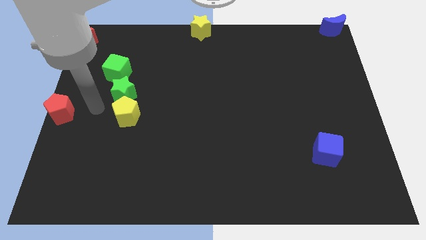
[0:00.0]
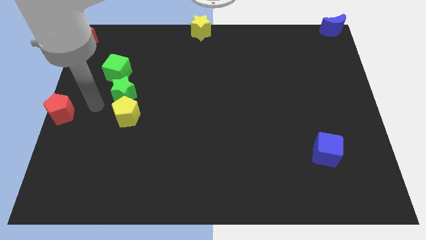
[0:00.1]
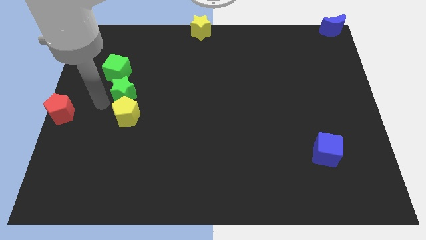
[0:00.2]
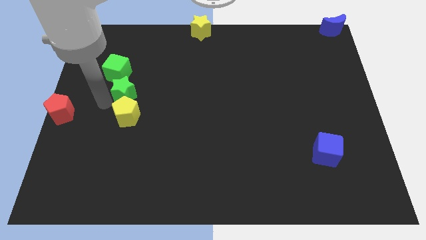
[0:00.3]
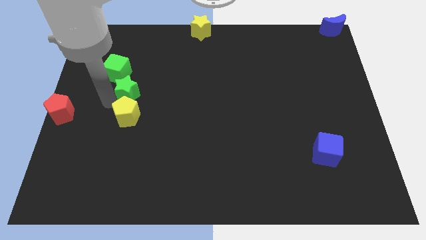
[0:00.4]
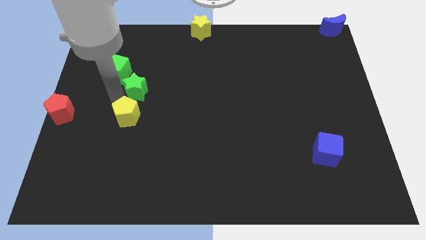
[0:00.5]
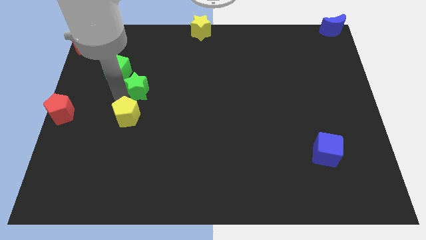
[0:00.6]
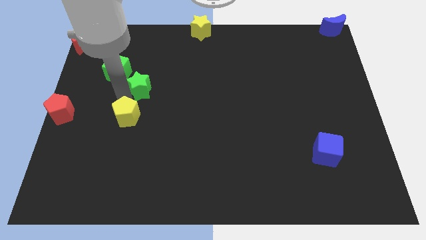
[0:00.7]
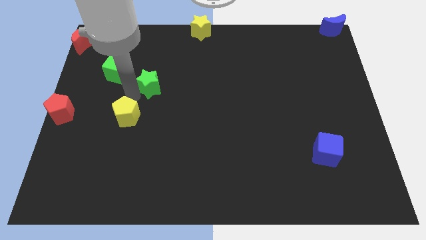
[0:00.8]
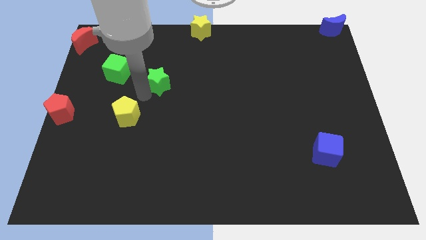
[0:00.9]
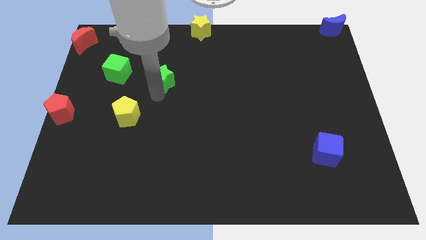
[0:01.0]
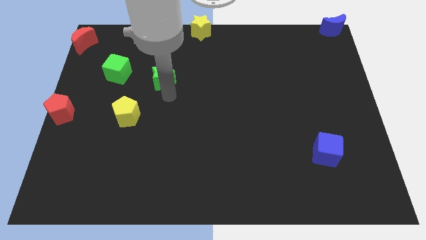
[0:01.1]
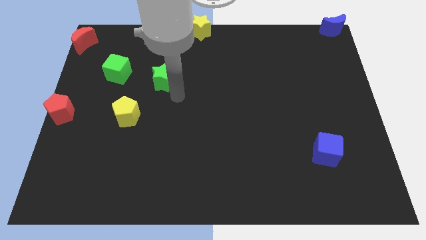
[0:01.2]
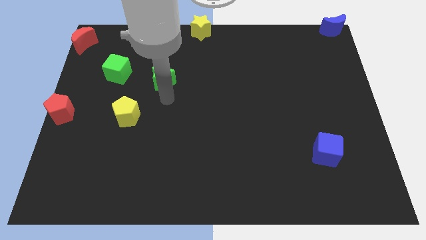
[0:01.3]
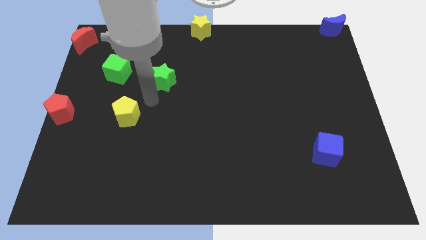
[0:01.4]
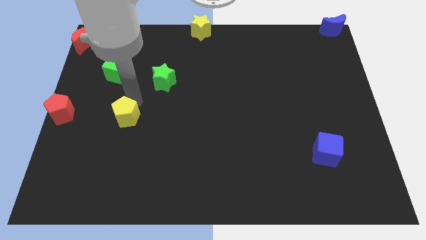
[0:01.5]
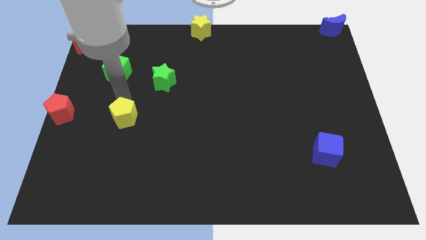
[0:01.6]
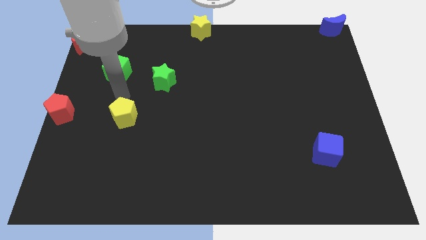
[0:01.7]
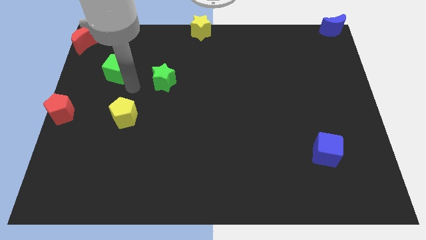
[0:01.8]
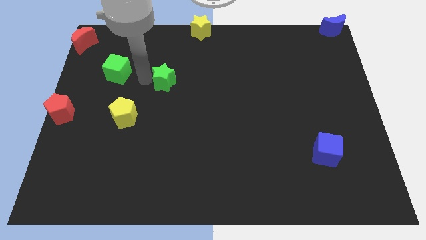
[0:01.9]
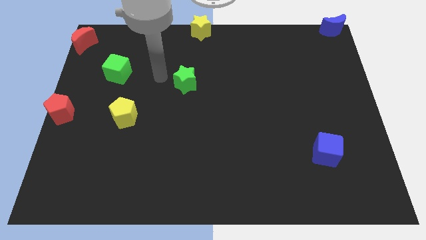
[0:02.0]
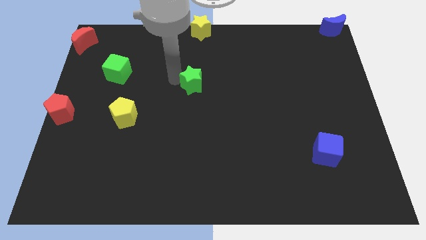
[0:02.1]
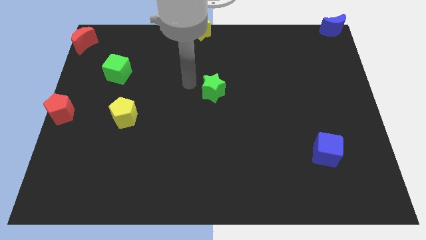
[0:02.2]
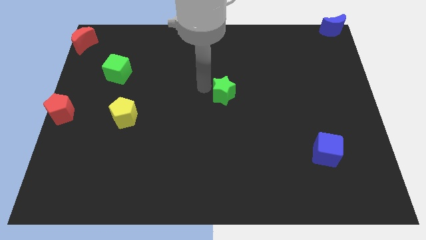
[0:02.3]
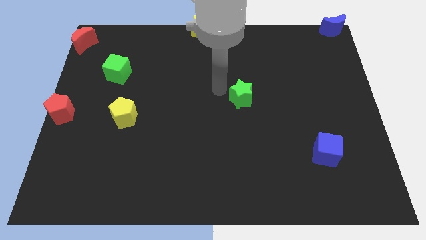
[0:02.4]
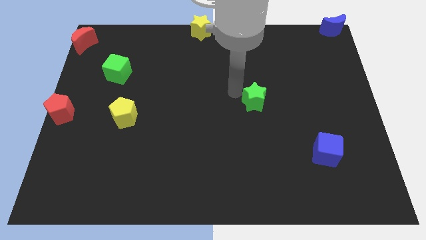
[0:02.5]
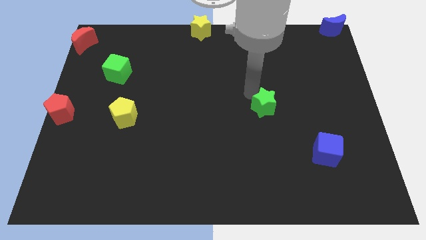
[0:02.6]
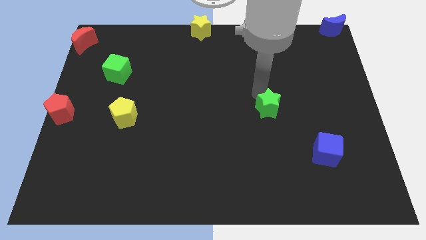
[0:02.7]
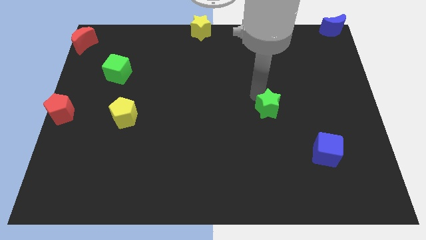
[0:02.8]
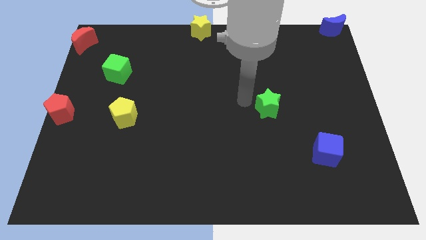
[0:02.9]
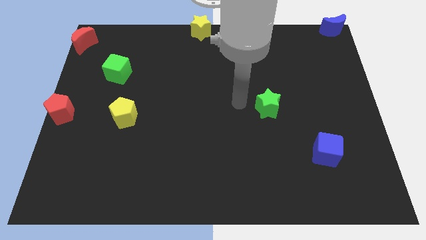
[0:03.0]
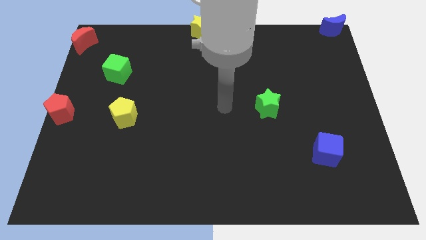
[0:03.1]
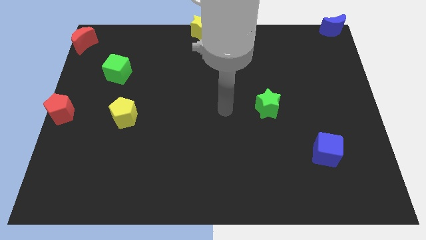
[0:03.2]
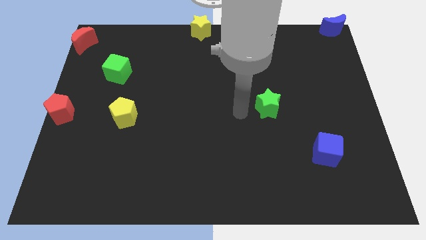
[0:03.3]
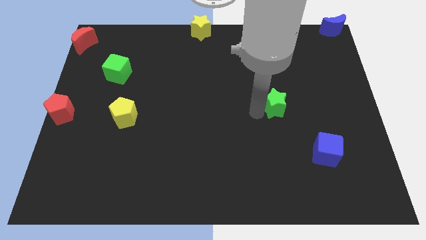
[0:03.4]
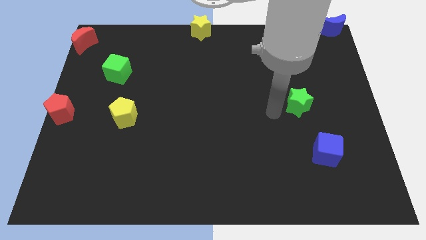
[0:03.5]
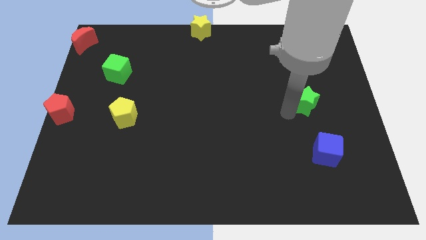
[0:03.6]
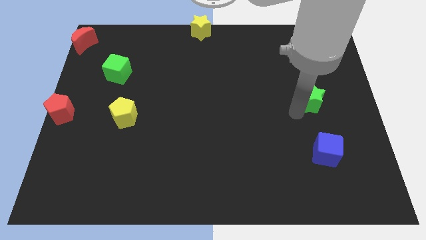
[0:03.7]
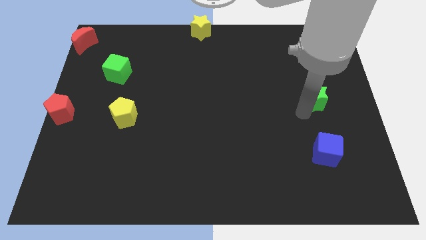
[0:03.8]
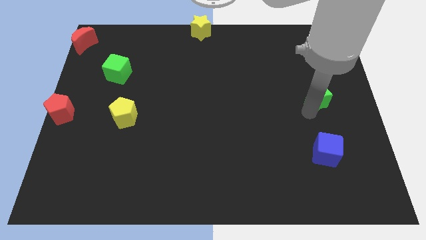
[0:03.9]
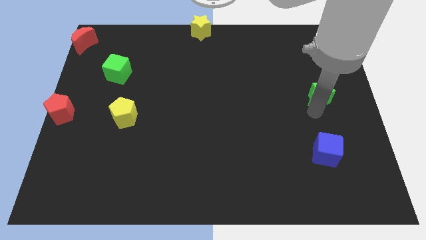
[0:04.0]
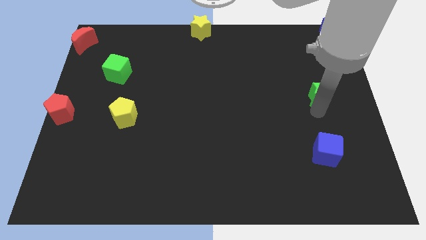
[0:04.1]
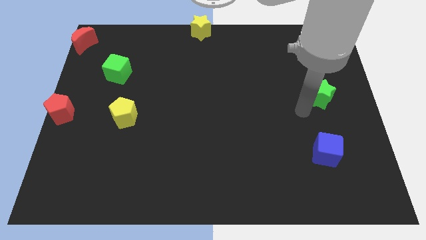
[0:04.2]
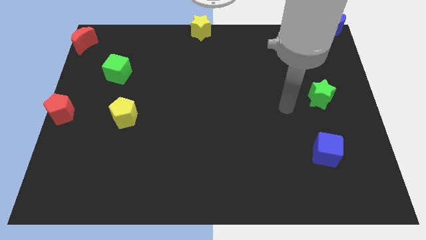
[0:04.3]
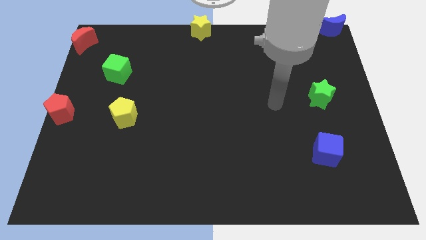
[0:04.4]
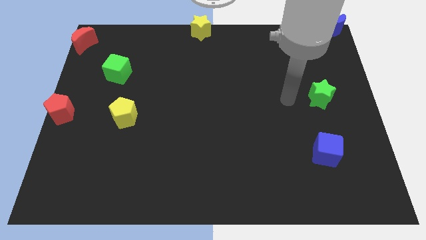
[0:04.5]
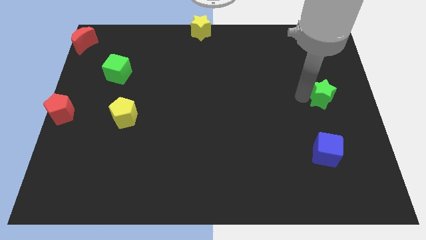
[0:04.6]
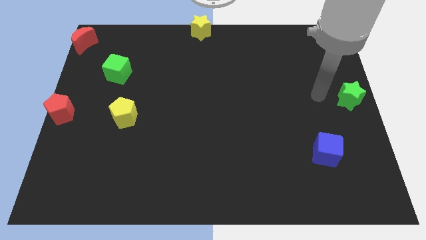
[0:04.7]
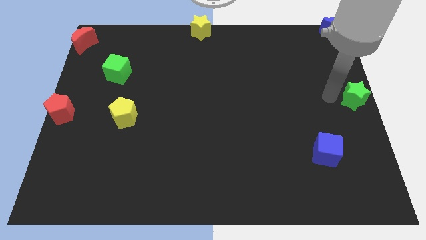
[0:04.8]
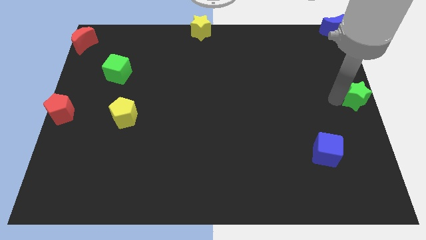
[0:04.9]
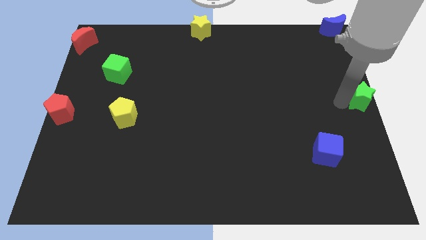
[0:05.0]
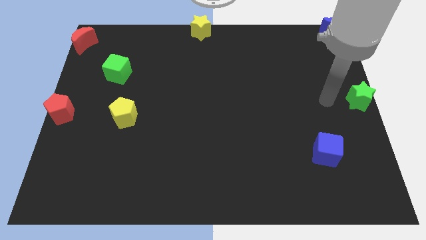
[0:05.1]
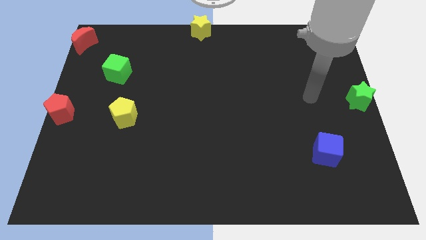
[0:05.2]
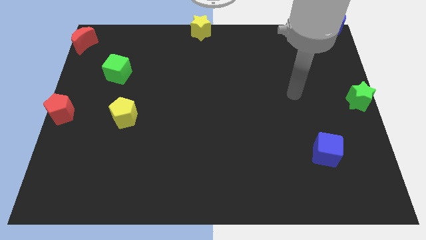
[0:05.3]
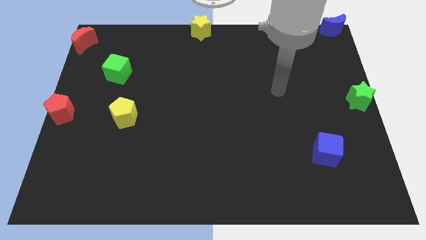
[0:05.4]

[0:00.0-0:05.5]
push the green star to the center right

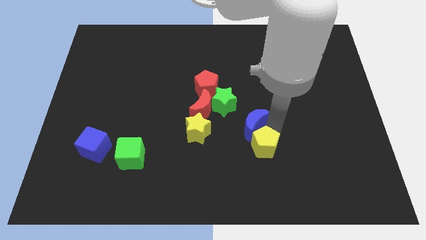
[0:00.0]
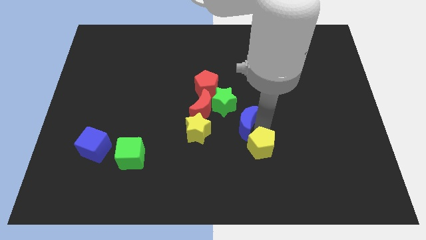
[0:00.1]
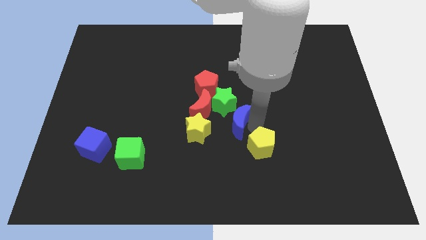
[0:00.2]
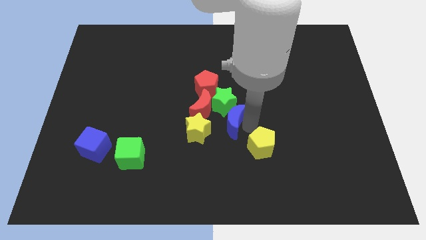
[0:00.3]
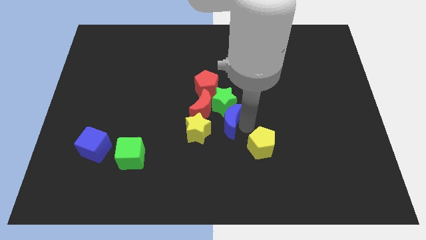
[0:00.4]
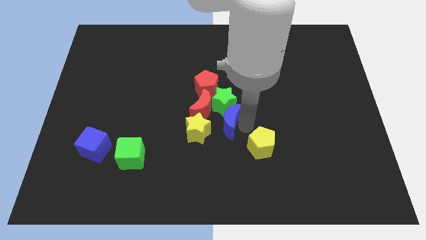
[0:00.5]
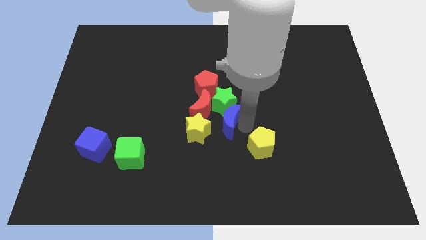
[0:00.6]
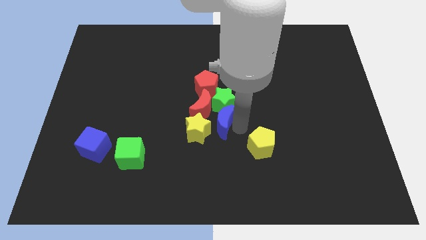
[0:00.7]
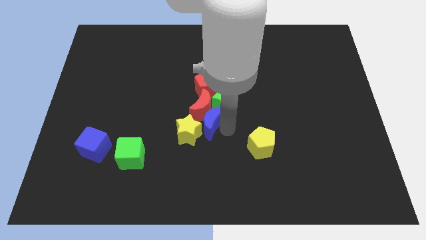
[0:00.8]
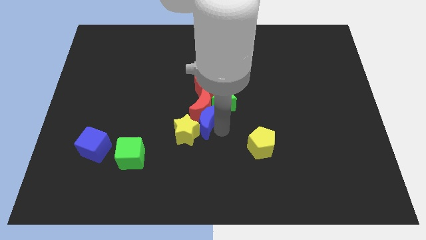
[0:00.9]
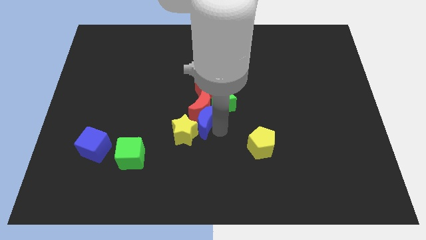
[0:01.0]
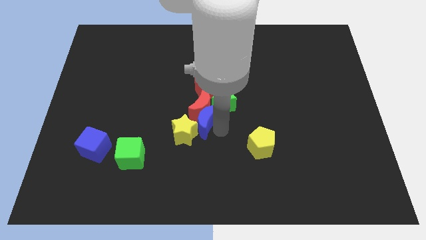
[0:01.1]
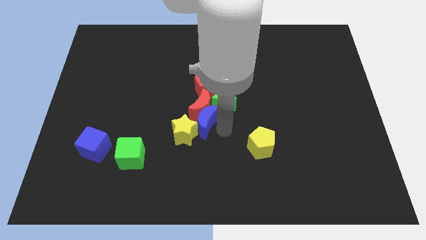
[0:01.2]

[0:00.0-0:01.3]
move the blue crescent into the red crescent

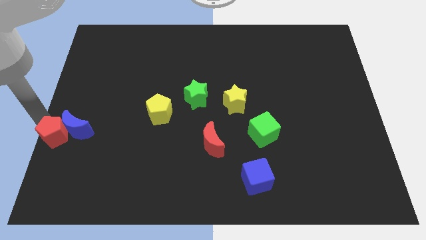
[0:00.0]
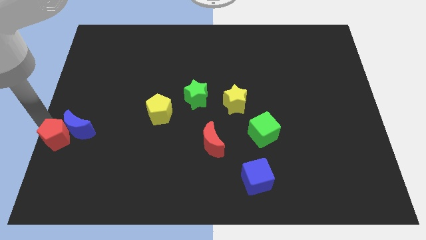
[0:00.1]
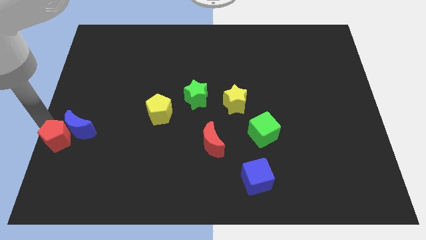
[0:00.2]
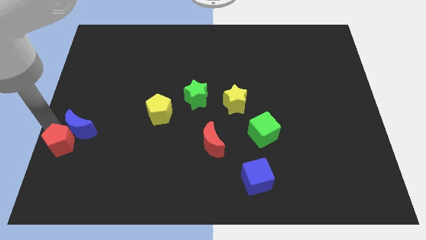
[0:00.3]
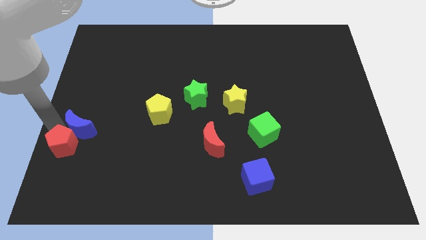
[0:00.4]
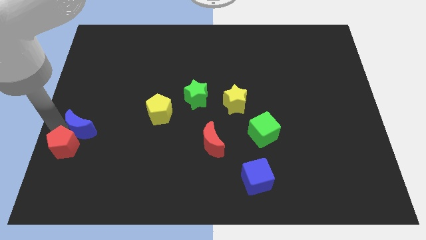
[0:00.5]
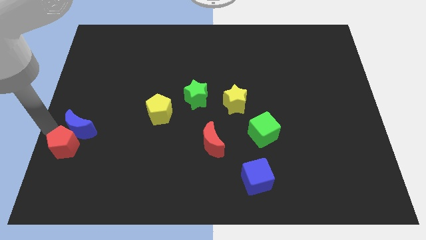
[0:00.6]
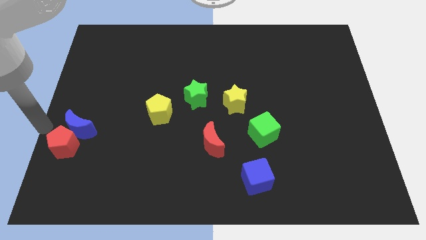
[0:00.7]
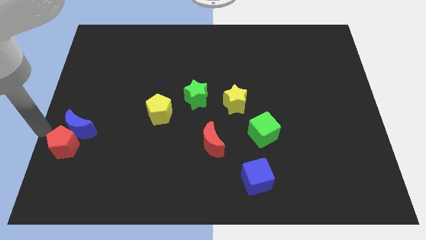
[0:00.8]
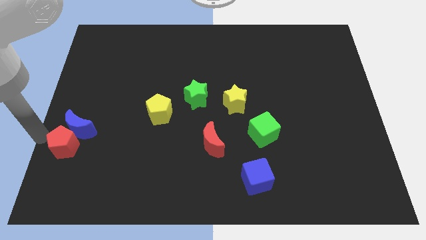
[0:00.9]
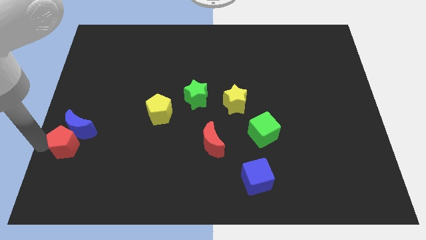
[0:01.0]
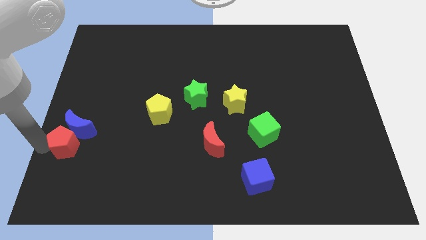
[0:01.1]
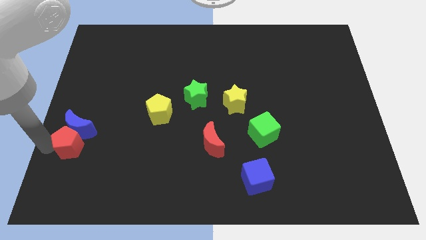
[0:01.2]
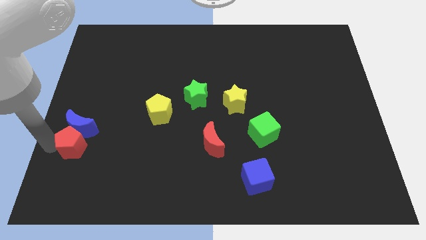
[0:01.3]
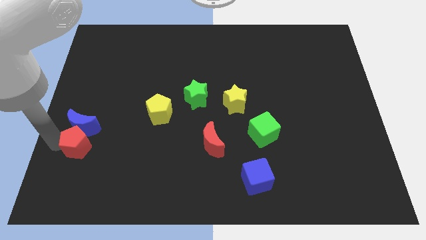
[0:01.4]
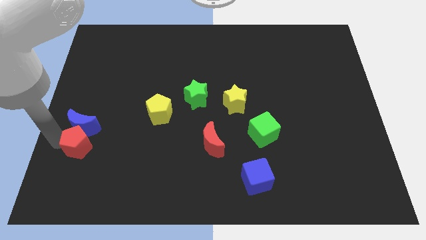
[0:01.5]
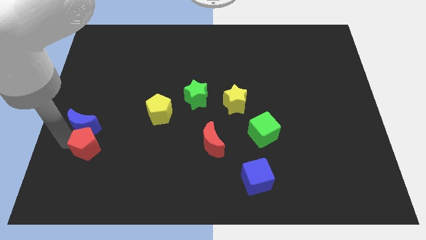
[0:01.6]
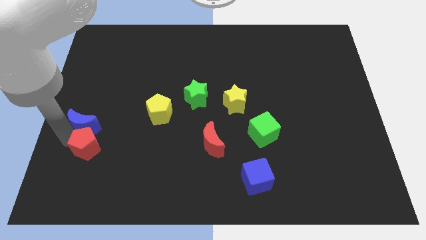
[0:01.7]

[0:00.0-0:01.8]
move the red pentagon below the blue moon

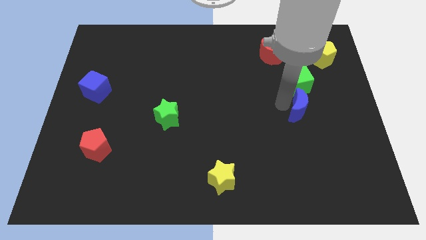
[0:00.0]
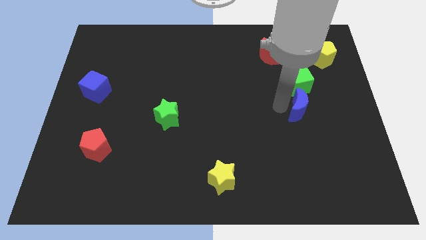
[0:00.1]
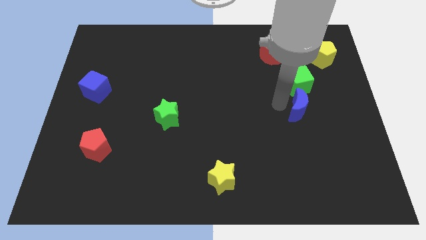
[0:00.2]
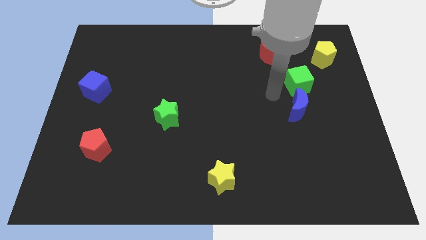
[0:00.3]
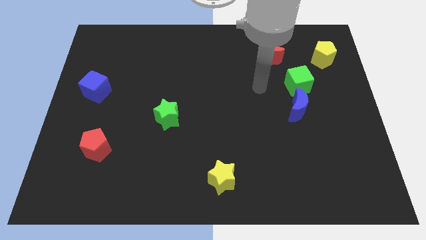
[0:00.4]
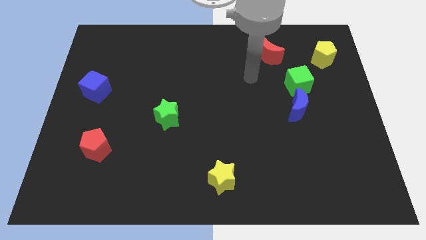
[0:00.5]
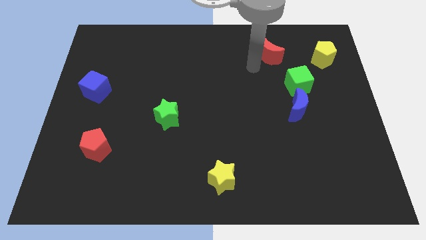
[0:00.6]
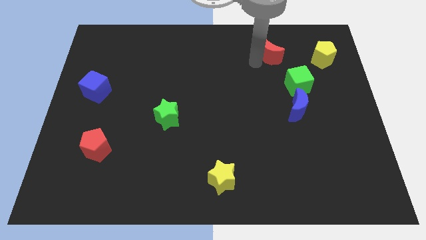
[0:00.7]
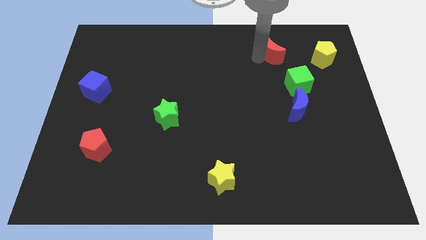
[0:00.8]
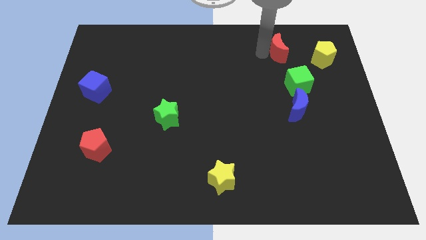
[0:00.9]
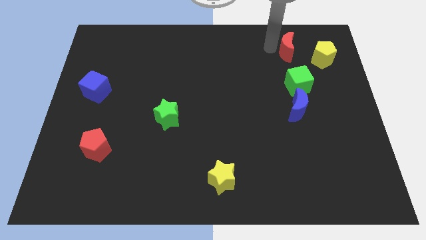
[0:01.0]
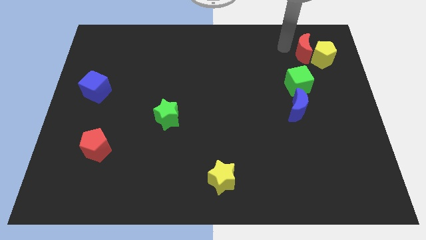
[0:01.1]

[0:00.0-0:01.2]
place the red crescent above the green cube
